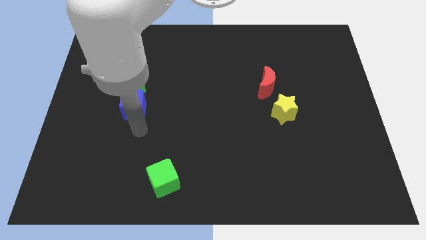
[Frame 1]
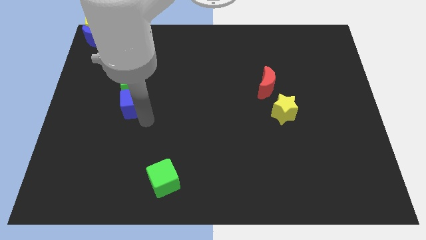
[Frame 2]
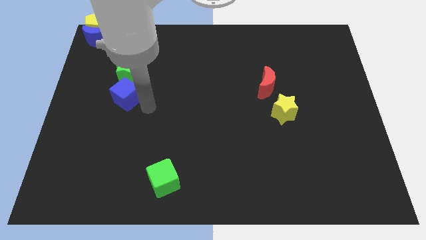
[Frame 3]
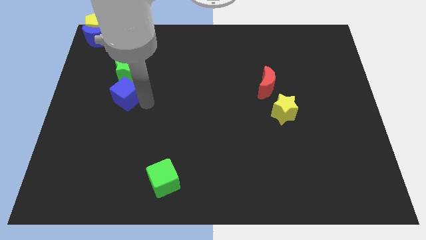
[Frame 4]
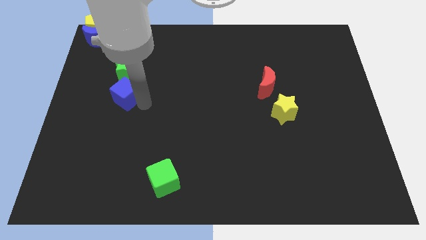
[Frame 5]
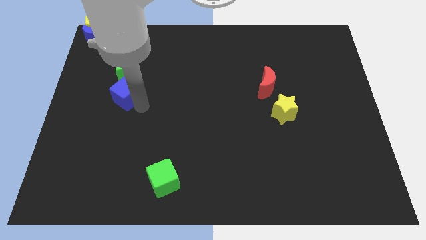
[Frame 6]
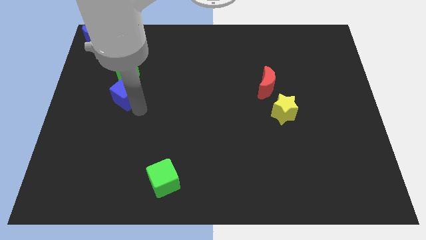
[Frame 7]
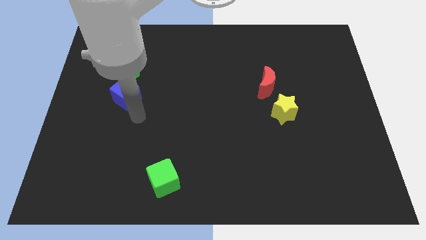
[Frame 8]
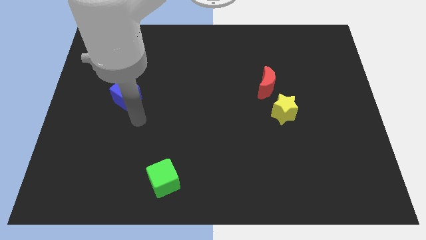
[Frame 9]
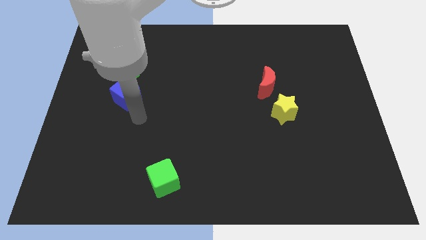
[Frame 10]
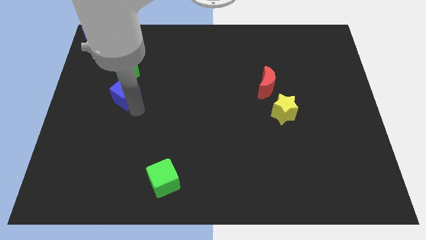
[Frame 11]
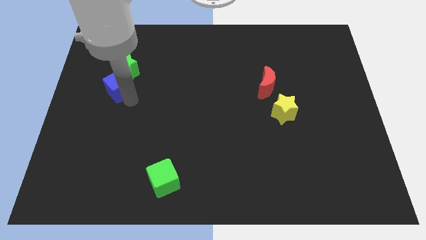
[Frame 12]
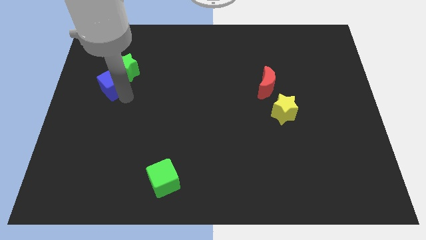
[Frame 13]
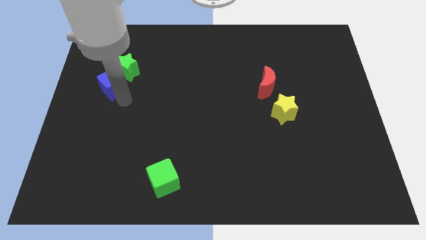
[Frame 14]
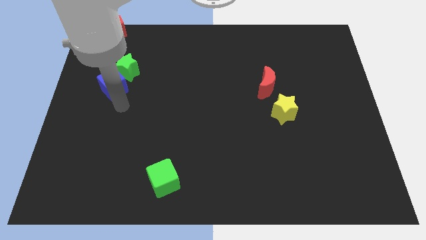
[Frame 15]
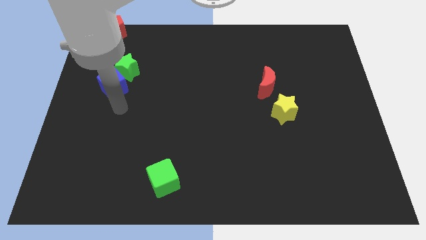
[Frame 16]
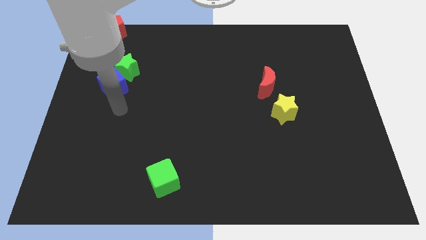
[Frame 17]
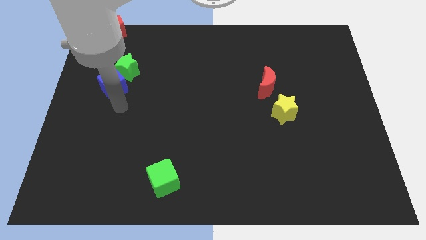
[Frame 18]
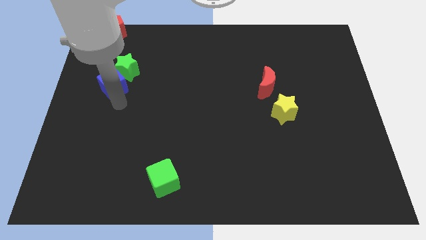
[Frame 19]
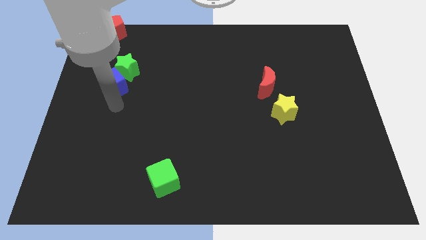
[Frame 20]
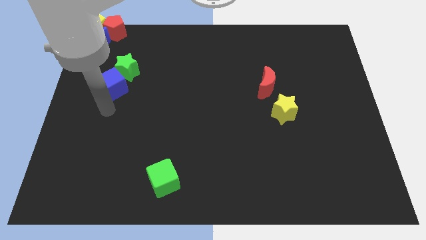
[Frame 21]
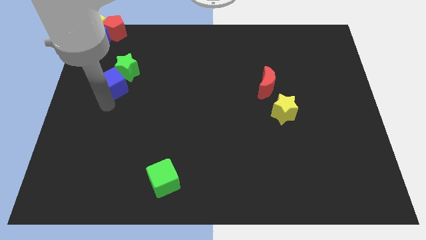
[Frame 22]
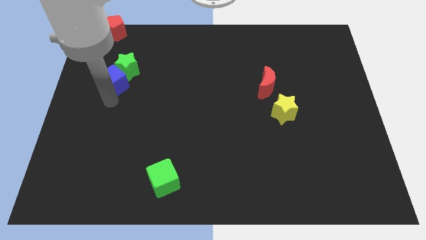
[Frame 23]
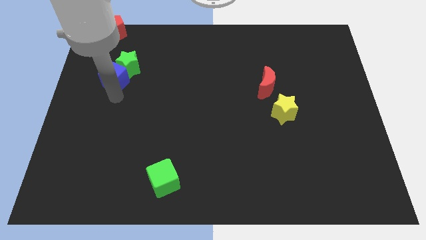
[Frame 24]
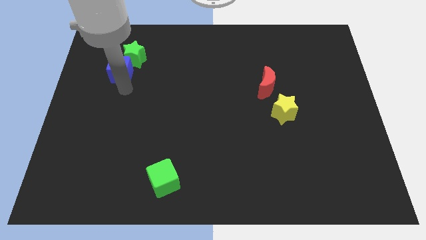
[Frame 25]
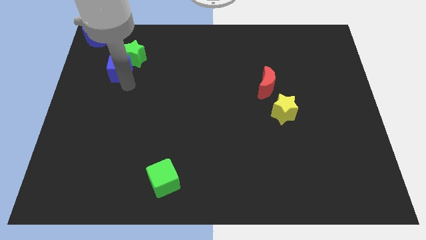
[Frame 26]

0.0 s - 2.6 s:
drag the green star along with the blue cube towards up

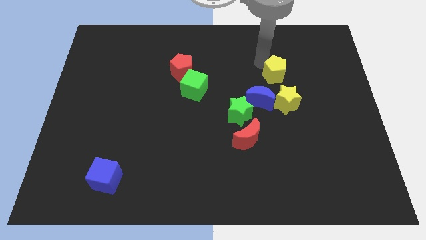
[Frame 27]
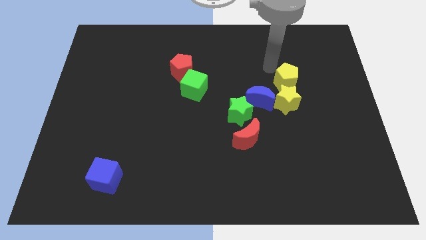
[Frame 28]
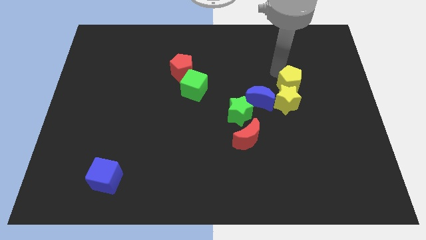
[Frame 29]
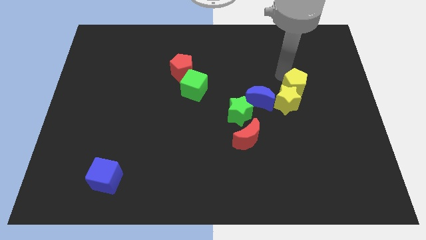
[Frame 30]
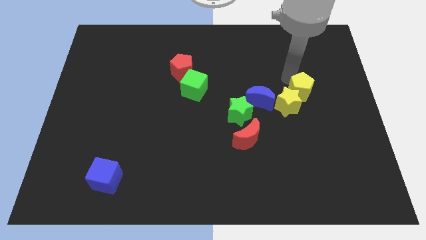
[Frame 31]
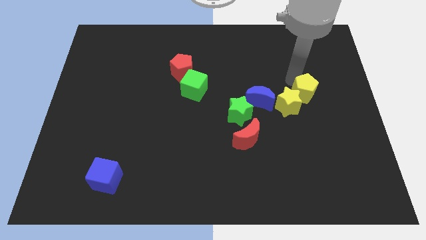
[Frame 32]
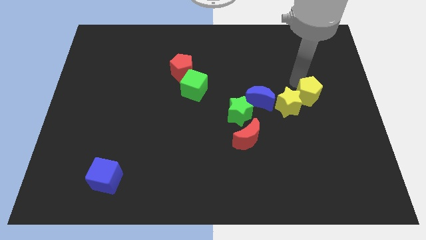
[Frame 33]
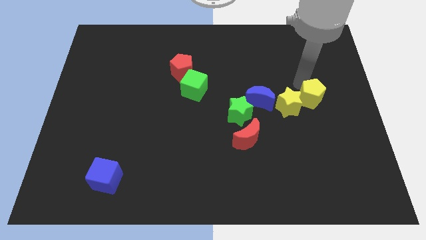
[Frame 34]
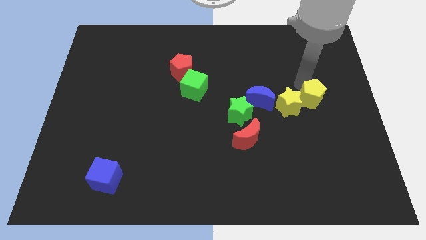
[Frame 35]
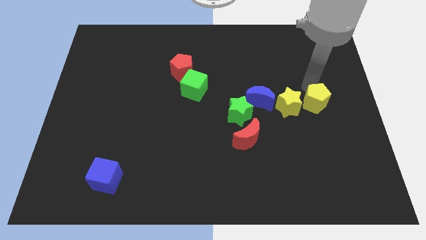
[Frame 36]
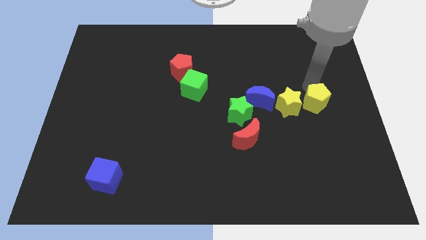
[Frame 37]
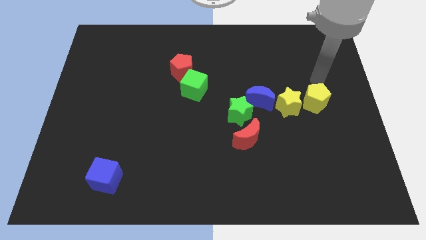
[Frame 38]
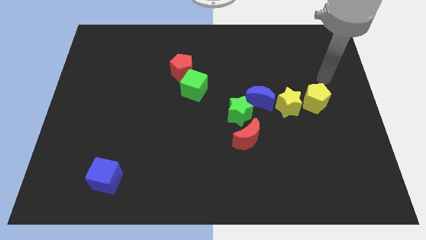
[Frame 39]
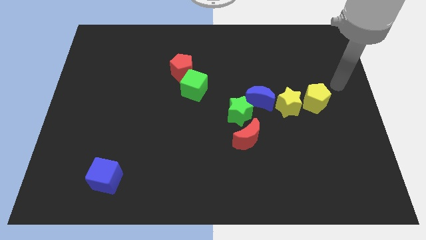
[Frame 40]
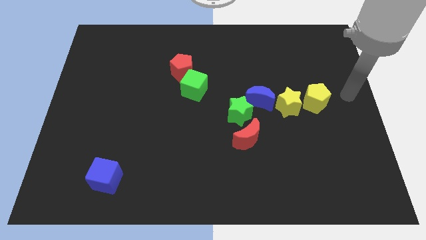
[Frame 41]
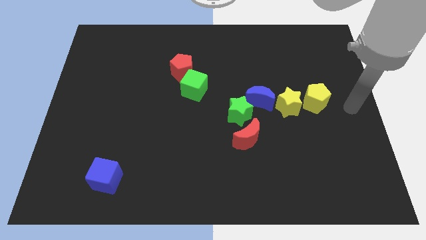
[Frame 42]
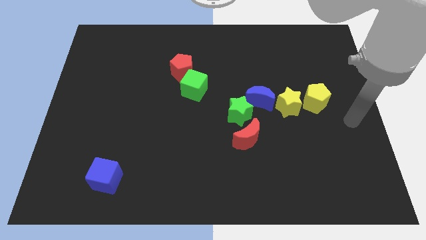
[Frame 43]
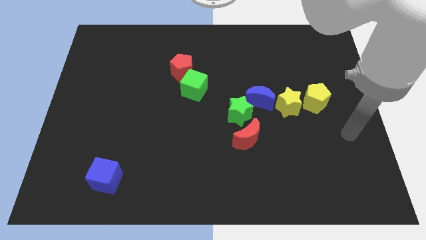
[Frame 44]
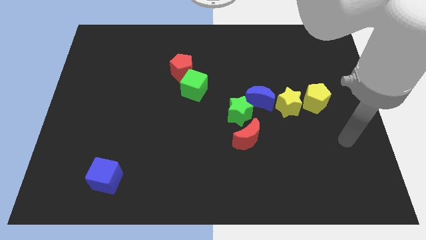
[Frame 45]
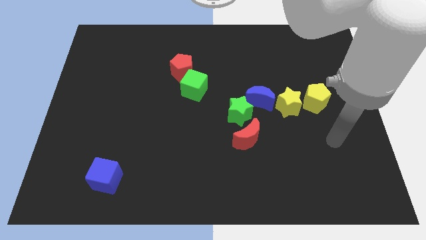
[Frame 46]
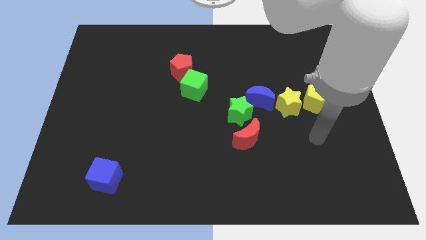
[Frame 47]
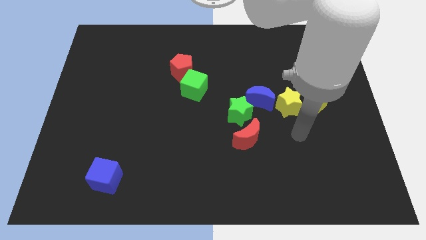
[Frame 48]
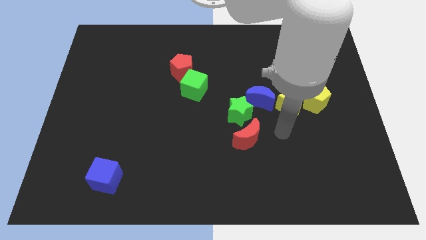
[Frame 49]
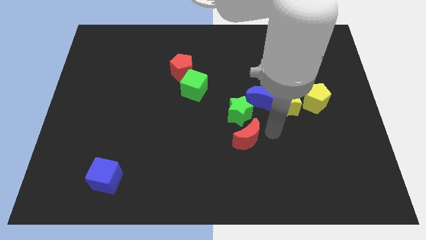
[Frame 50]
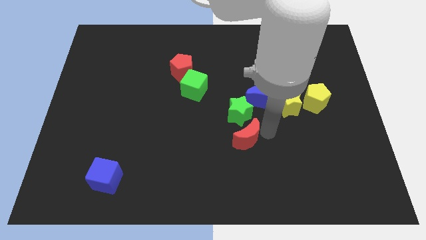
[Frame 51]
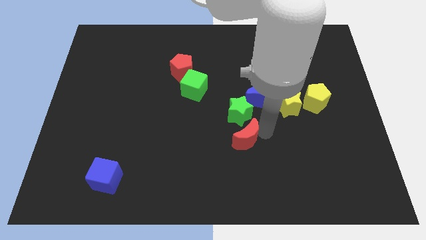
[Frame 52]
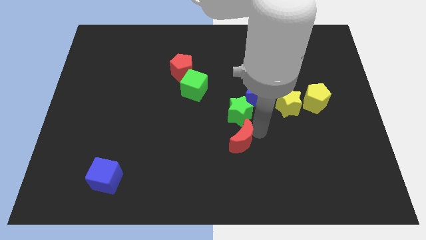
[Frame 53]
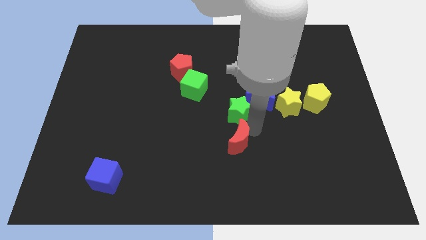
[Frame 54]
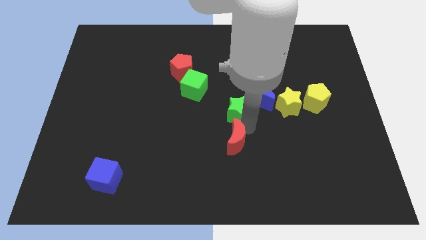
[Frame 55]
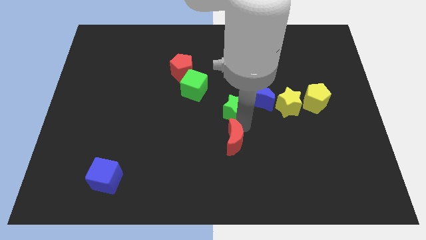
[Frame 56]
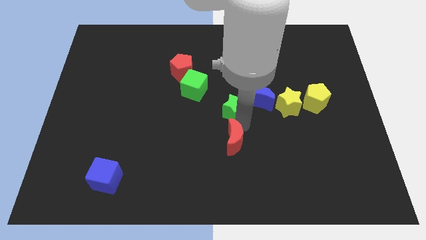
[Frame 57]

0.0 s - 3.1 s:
push red crescent below green star

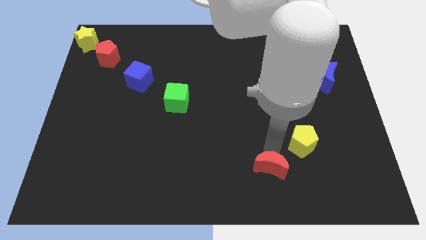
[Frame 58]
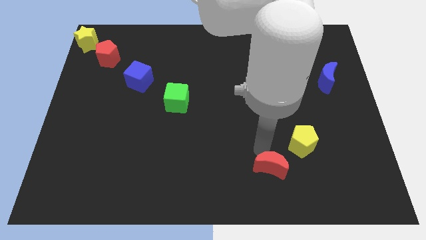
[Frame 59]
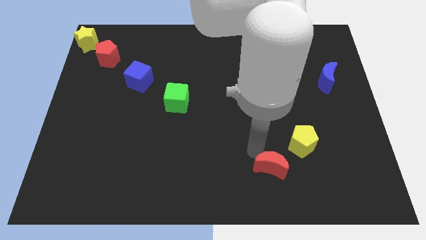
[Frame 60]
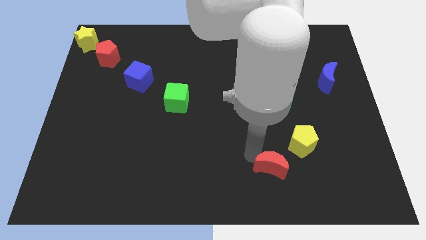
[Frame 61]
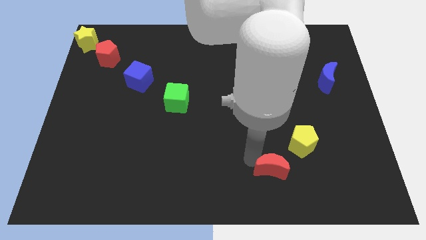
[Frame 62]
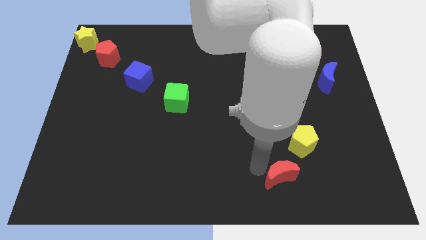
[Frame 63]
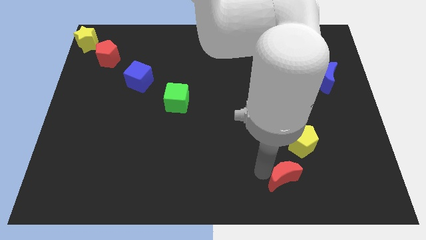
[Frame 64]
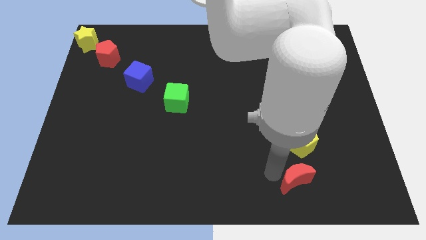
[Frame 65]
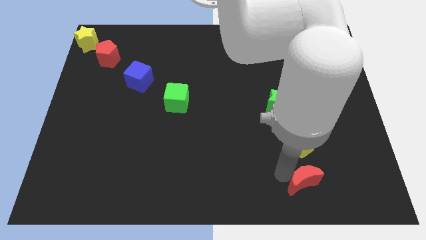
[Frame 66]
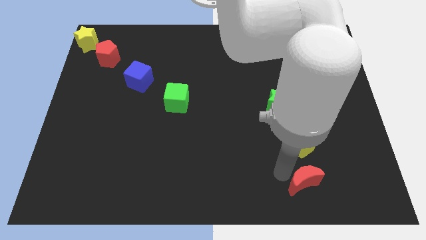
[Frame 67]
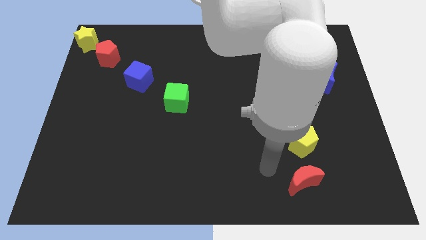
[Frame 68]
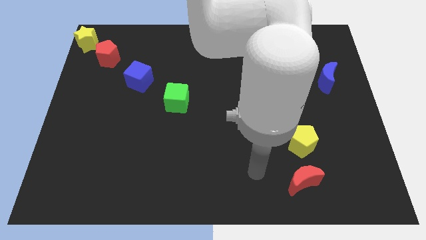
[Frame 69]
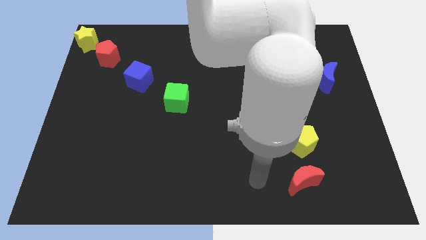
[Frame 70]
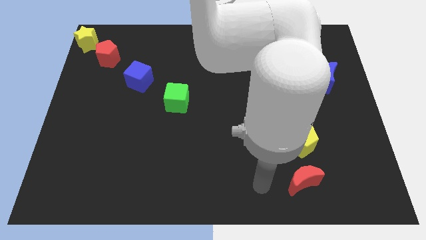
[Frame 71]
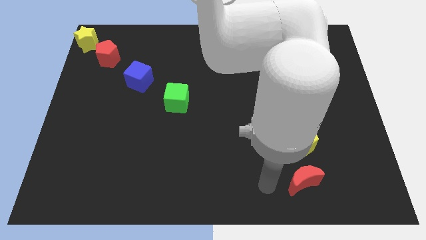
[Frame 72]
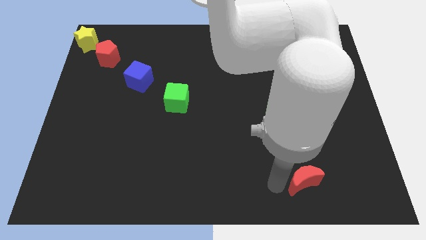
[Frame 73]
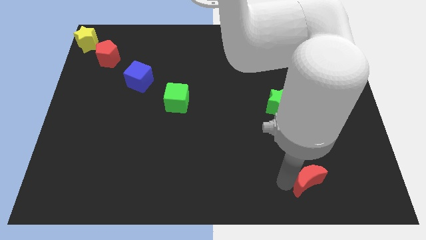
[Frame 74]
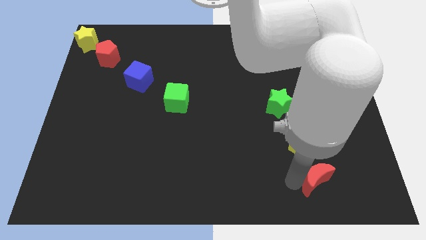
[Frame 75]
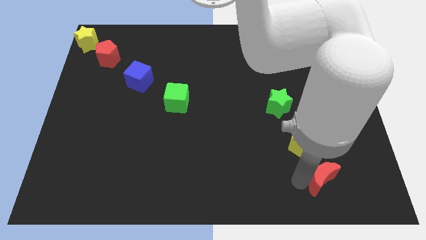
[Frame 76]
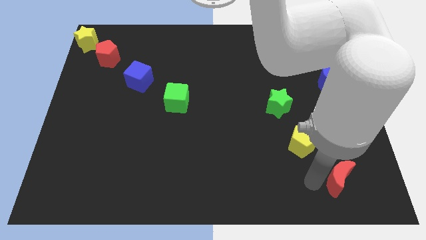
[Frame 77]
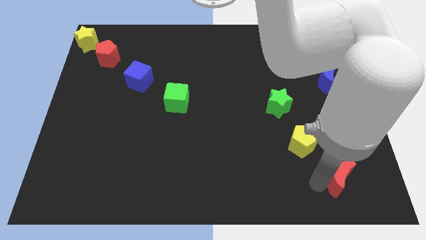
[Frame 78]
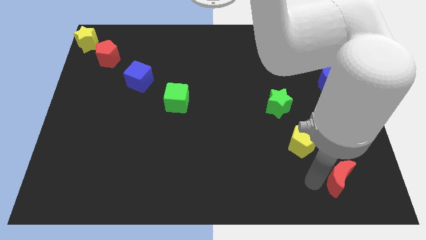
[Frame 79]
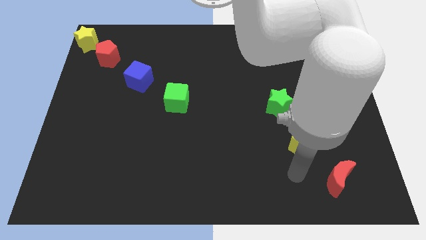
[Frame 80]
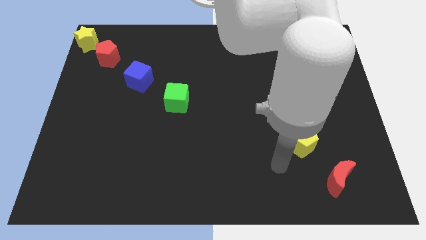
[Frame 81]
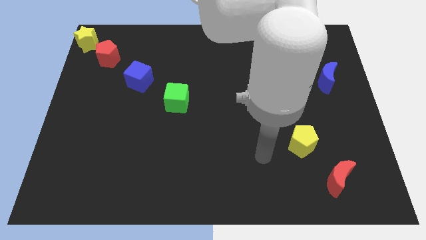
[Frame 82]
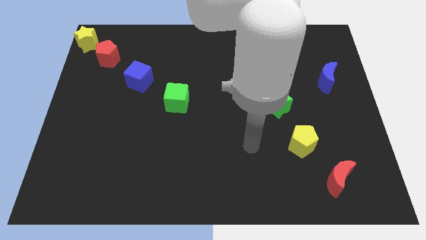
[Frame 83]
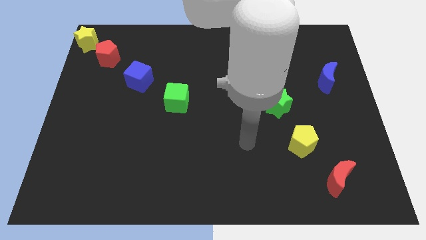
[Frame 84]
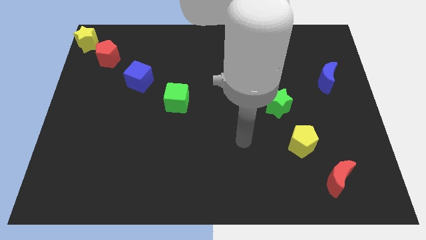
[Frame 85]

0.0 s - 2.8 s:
move red moon to the bottom right of the yellow pentagon

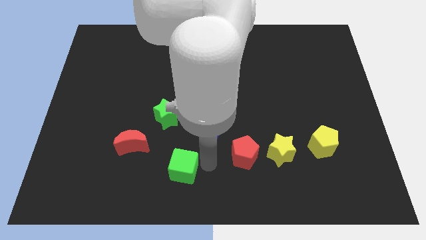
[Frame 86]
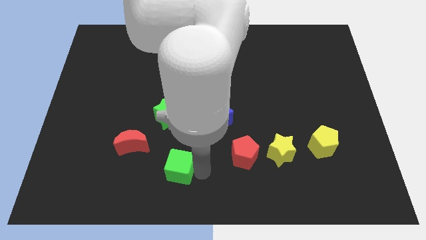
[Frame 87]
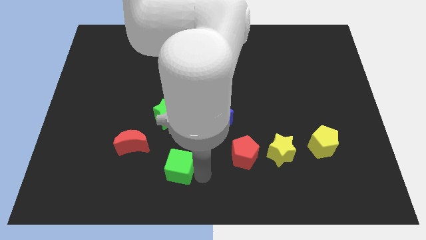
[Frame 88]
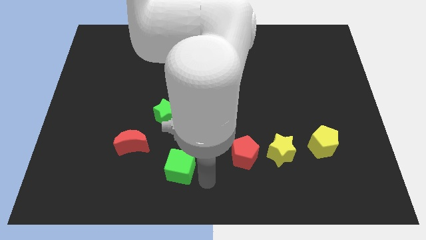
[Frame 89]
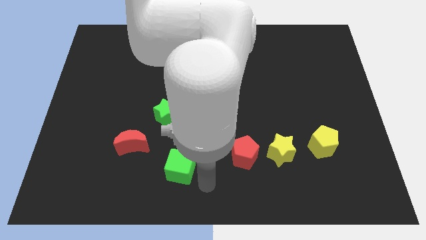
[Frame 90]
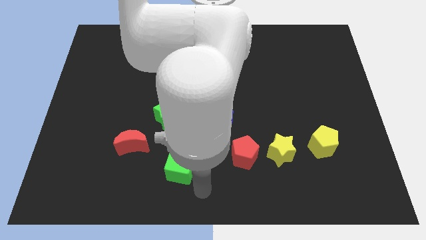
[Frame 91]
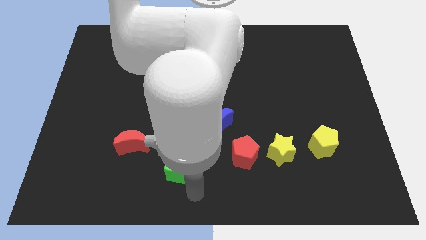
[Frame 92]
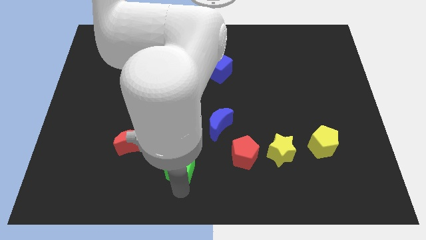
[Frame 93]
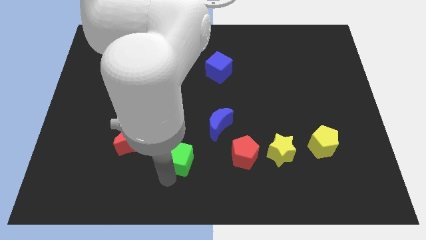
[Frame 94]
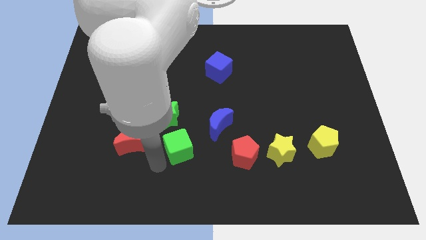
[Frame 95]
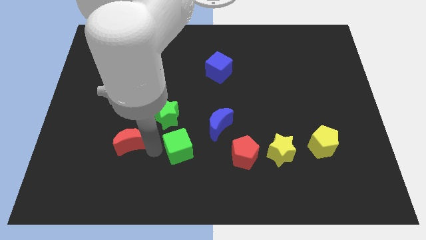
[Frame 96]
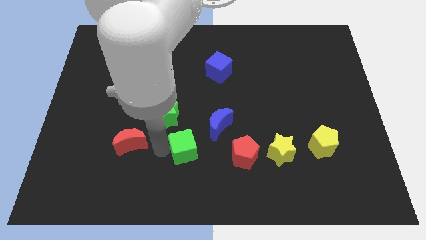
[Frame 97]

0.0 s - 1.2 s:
place green cube to the right of red moon
